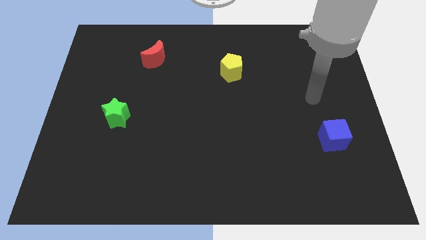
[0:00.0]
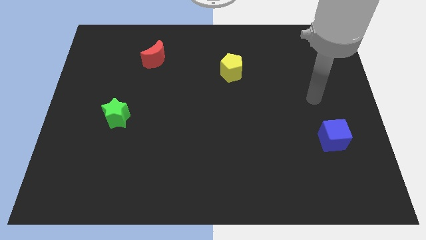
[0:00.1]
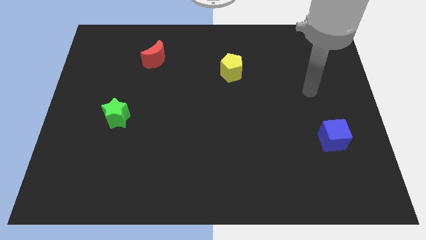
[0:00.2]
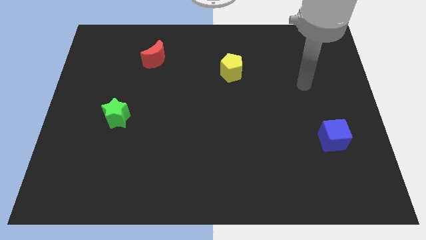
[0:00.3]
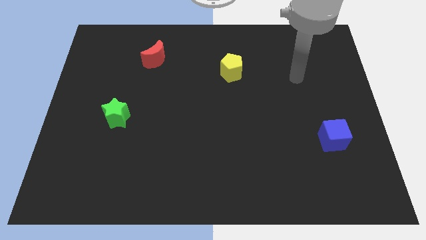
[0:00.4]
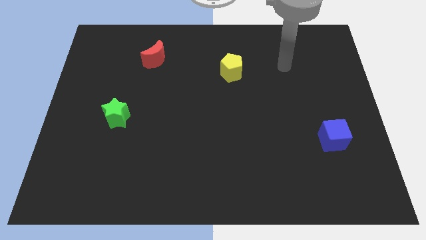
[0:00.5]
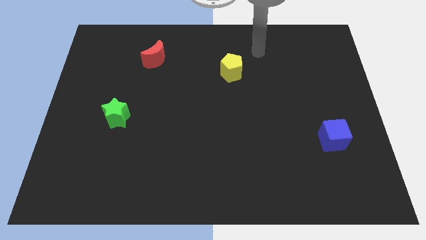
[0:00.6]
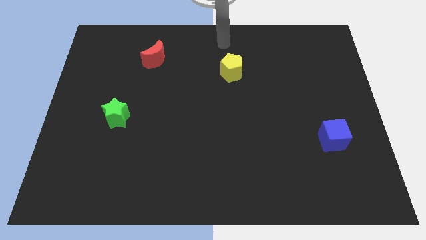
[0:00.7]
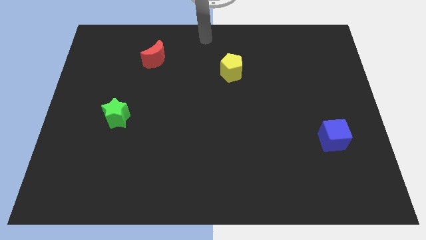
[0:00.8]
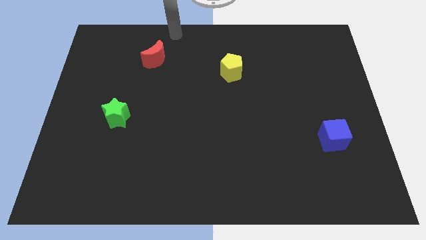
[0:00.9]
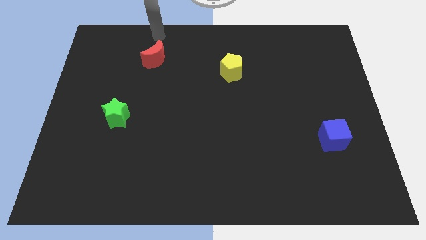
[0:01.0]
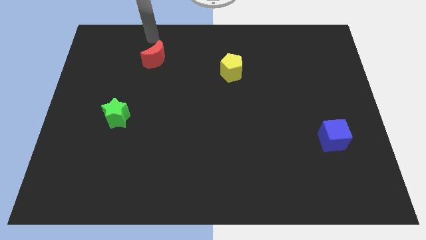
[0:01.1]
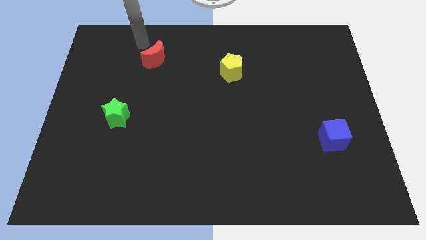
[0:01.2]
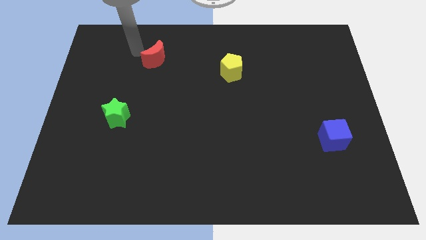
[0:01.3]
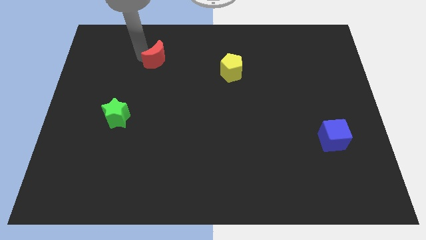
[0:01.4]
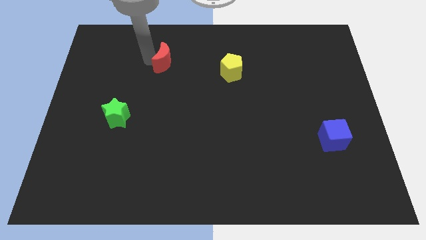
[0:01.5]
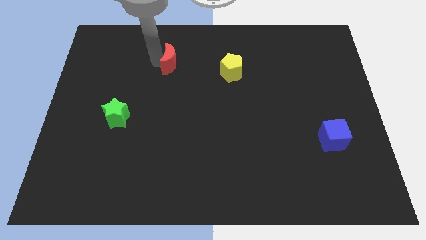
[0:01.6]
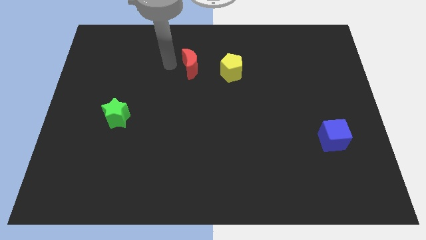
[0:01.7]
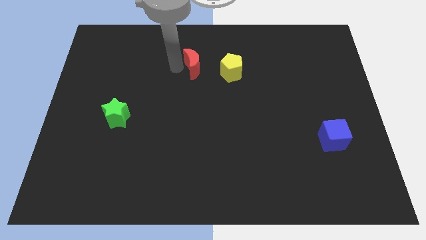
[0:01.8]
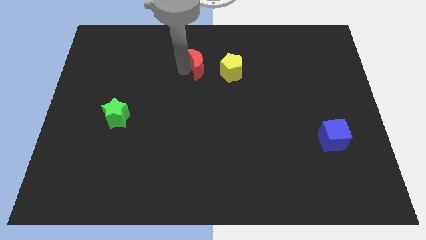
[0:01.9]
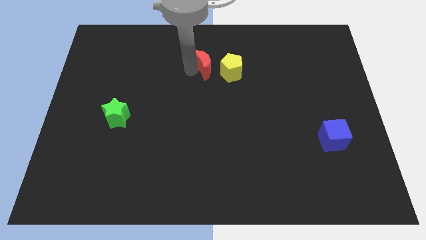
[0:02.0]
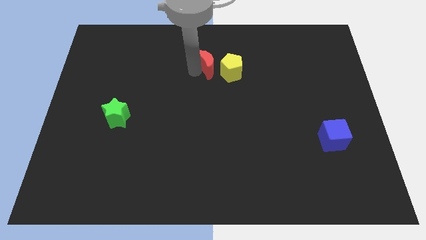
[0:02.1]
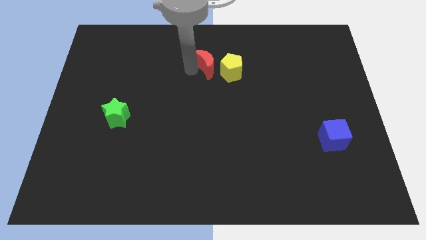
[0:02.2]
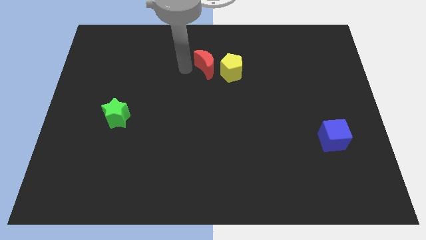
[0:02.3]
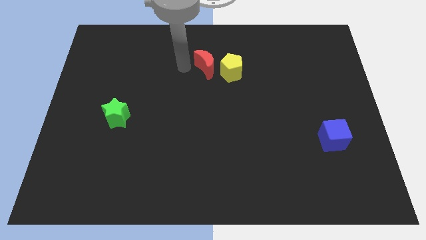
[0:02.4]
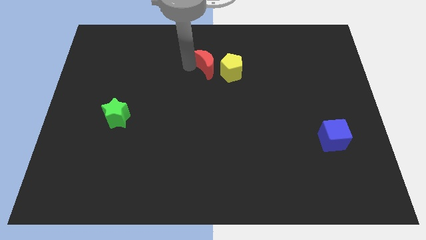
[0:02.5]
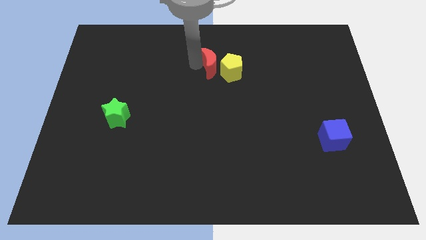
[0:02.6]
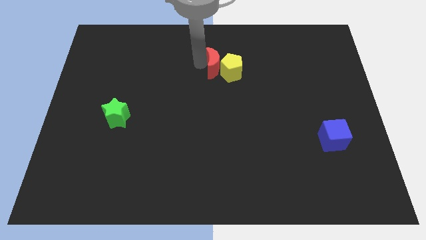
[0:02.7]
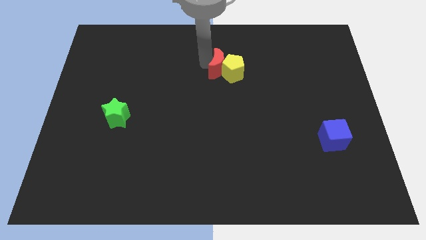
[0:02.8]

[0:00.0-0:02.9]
put the red block close to the pentagon

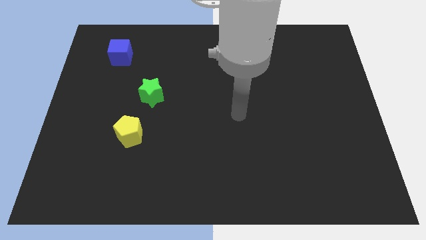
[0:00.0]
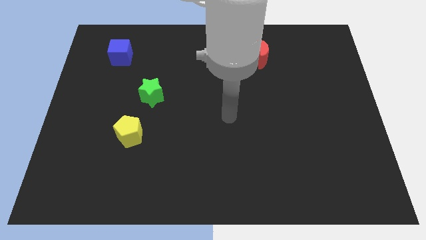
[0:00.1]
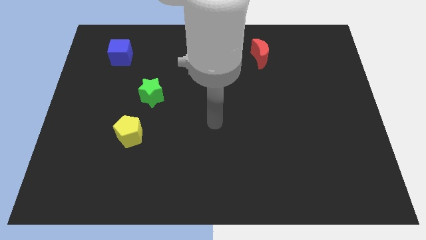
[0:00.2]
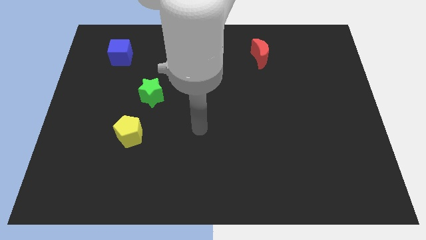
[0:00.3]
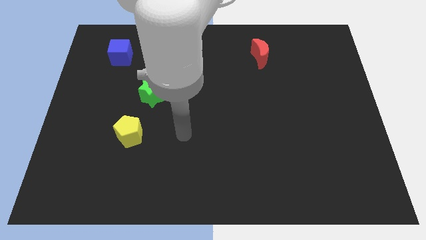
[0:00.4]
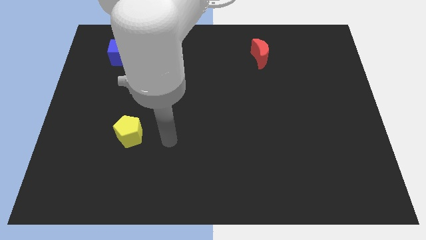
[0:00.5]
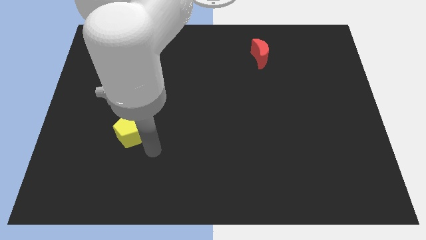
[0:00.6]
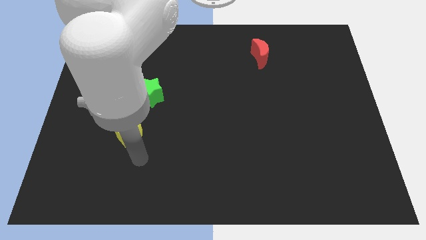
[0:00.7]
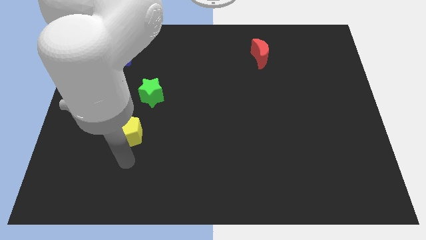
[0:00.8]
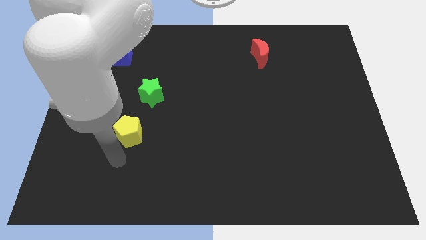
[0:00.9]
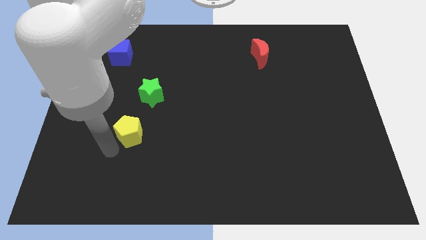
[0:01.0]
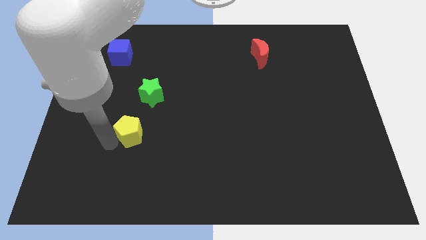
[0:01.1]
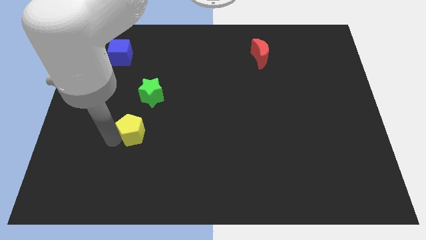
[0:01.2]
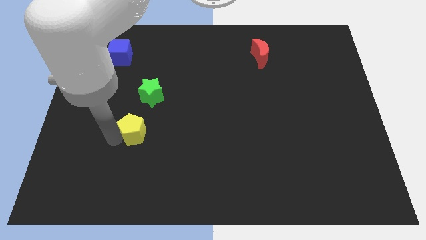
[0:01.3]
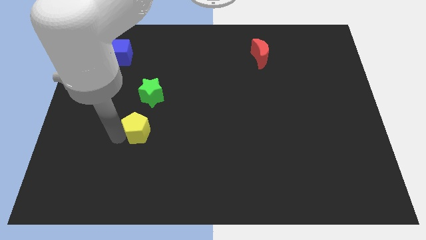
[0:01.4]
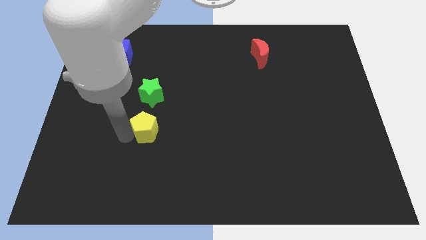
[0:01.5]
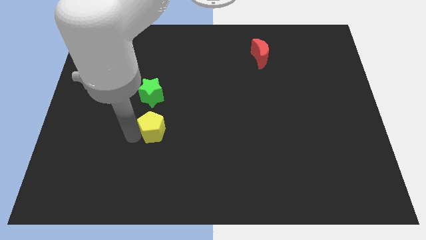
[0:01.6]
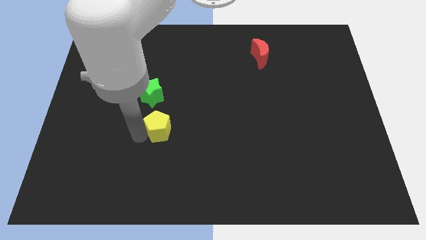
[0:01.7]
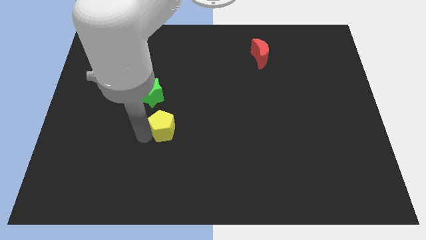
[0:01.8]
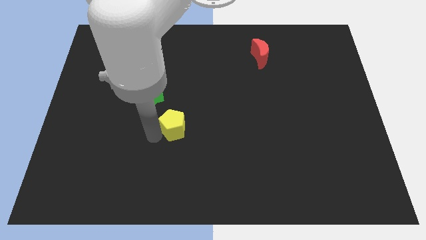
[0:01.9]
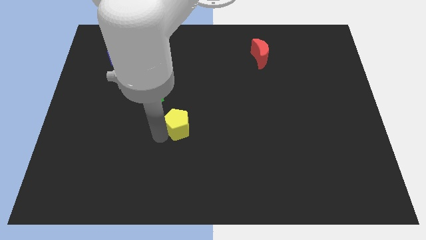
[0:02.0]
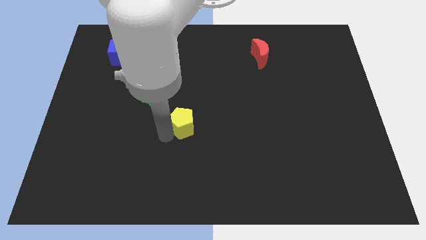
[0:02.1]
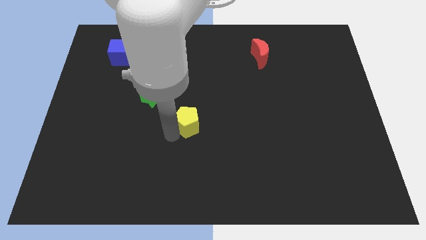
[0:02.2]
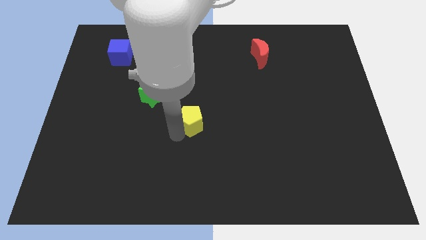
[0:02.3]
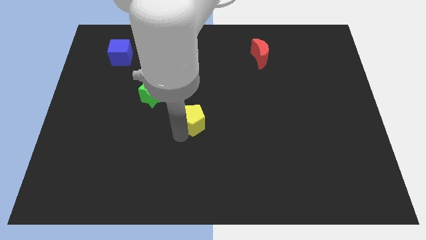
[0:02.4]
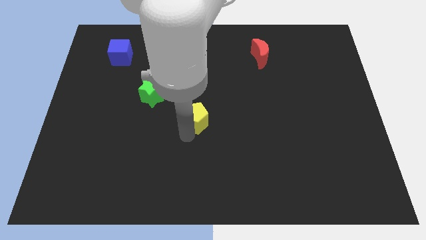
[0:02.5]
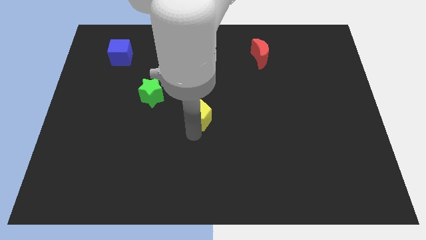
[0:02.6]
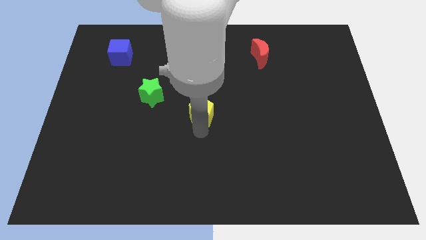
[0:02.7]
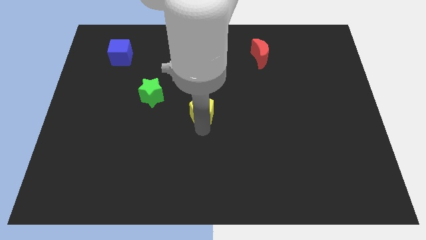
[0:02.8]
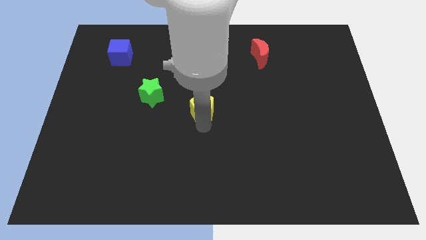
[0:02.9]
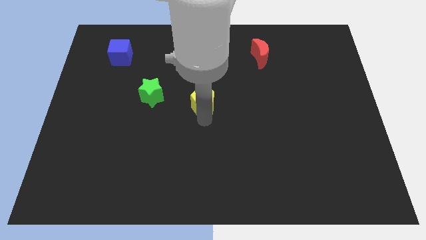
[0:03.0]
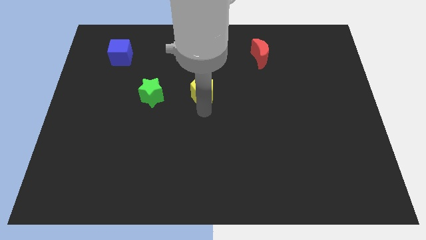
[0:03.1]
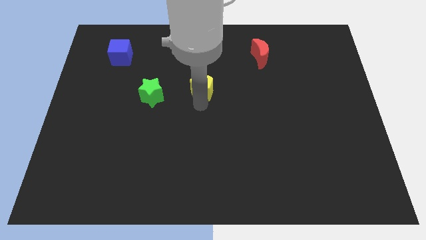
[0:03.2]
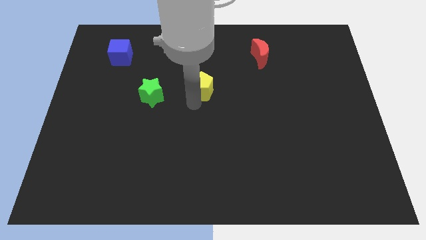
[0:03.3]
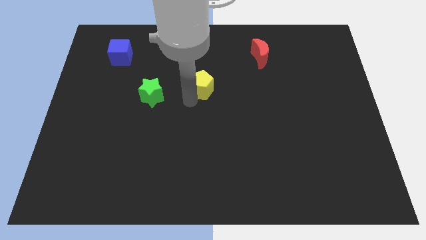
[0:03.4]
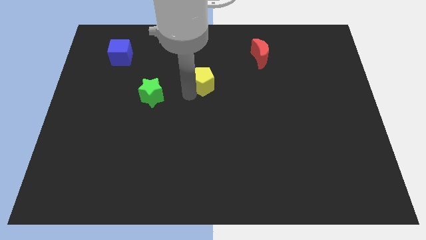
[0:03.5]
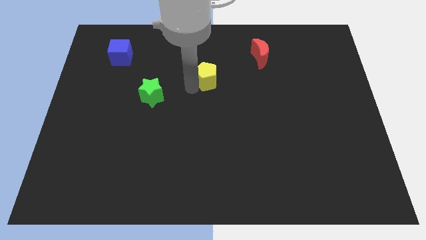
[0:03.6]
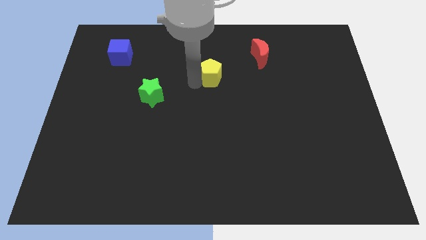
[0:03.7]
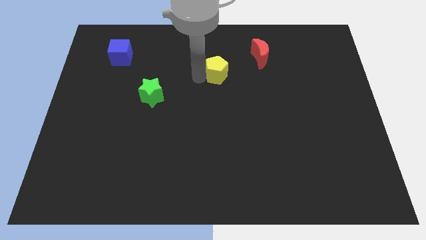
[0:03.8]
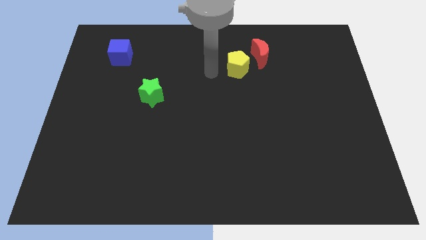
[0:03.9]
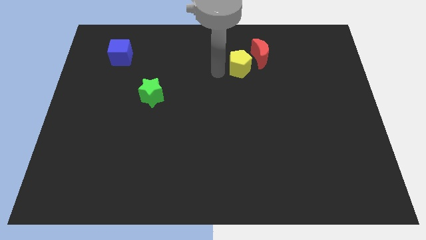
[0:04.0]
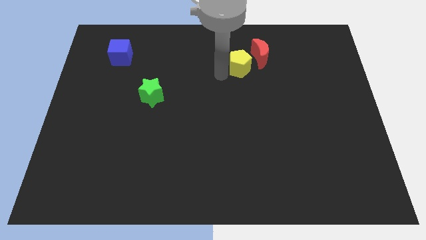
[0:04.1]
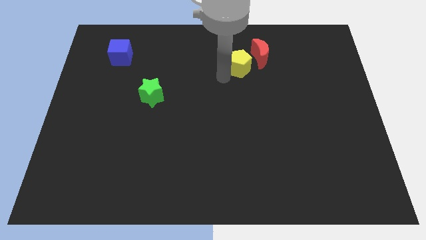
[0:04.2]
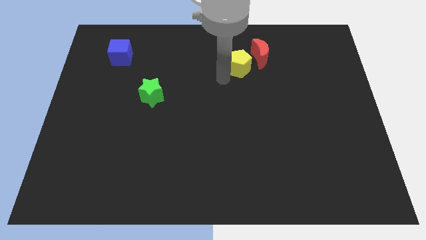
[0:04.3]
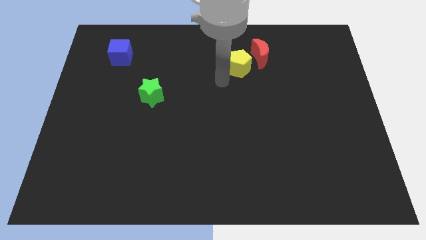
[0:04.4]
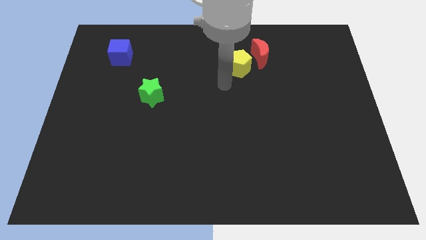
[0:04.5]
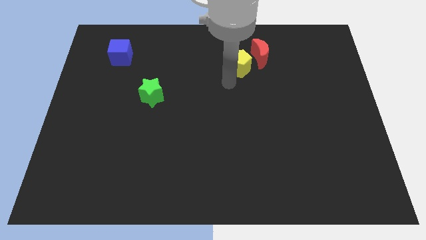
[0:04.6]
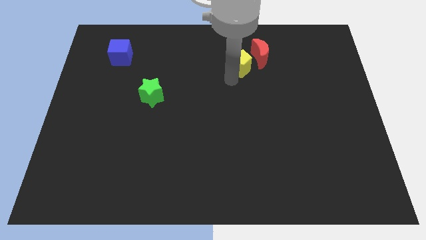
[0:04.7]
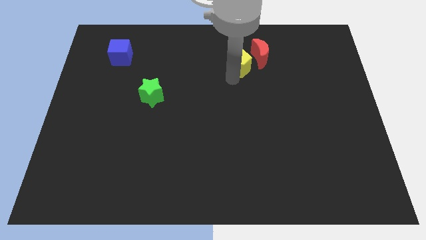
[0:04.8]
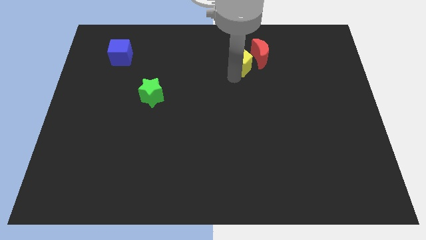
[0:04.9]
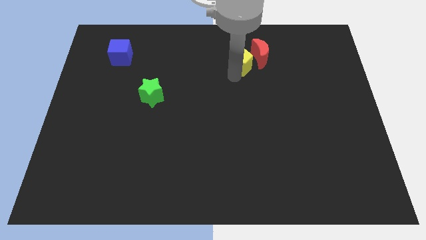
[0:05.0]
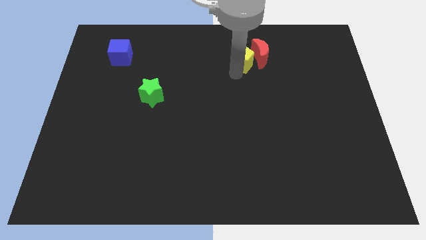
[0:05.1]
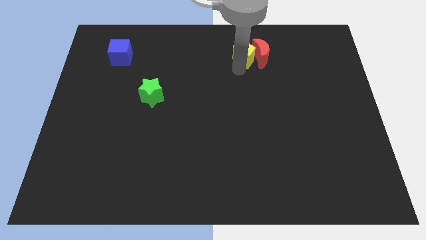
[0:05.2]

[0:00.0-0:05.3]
slide the pentagon close to the red block

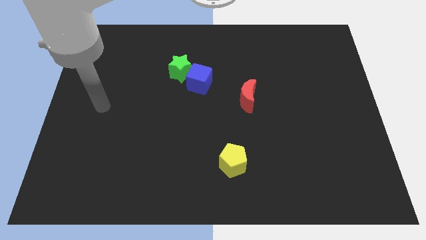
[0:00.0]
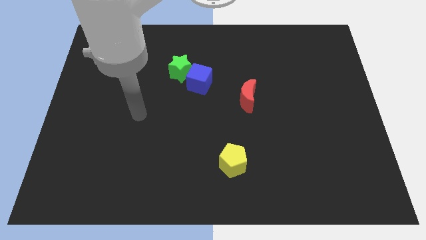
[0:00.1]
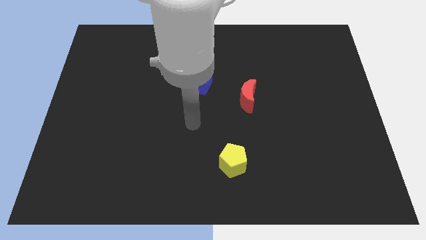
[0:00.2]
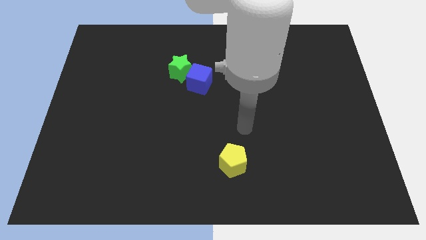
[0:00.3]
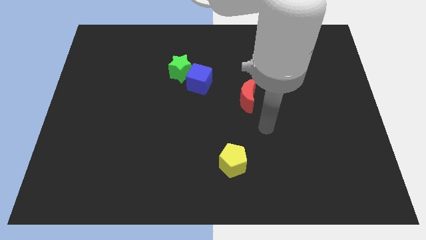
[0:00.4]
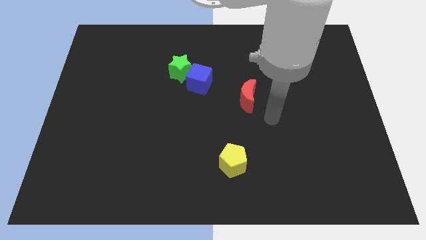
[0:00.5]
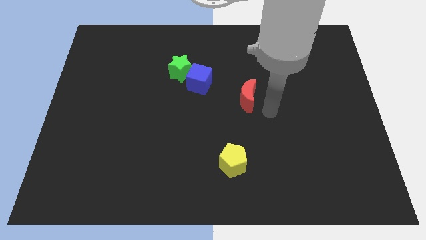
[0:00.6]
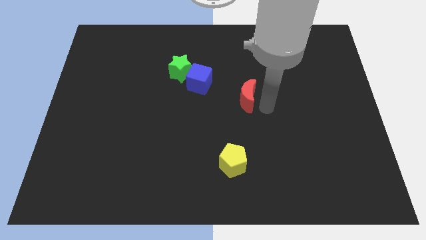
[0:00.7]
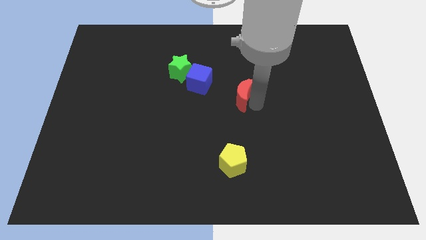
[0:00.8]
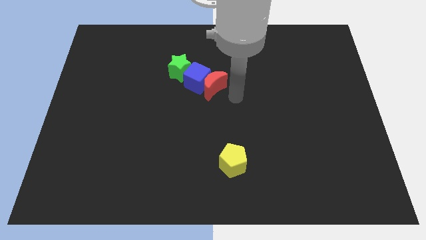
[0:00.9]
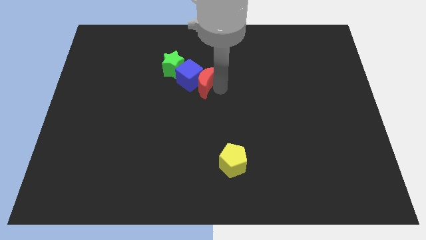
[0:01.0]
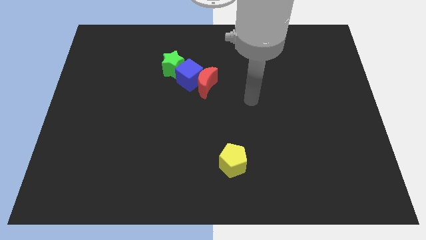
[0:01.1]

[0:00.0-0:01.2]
move the red block to the blue cube
